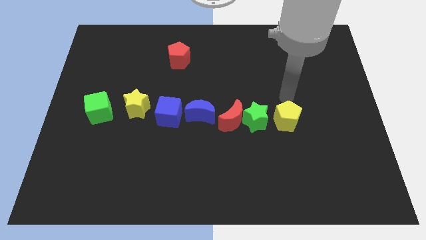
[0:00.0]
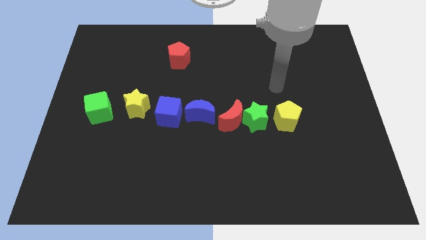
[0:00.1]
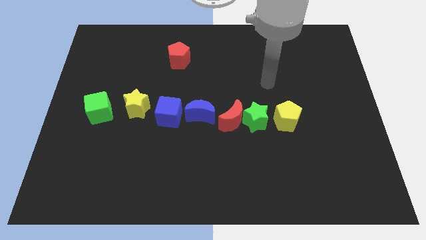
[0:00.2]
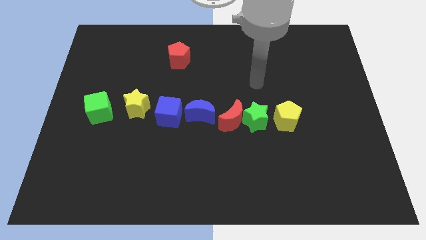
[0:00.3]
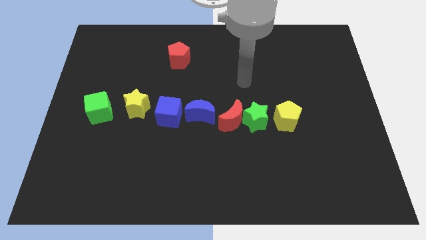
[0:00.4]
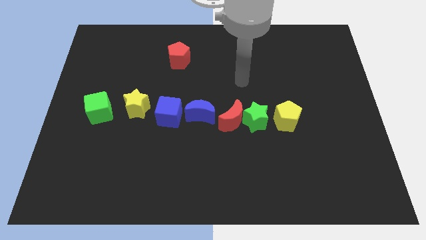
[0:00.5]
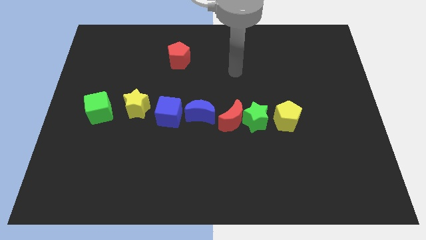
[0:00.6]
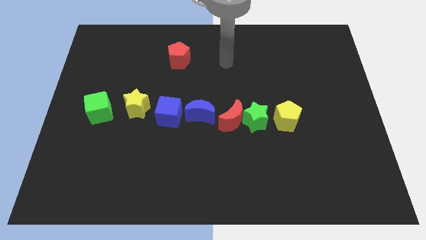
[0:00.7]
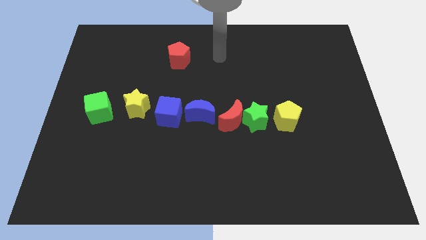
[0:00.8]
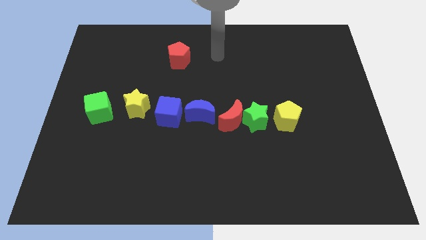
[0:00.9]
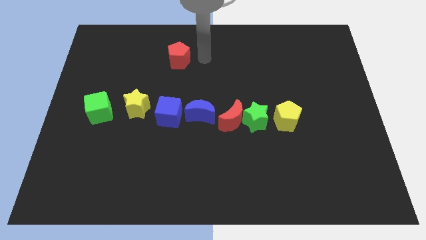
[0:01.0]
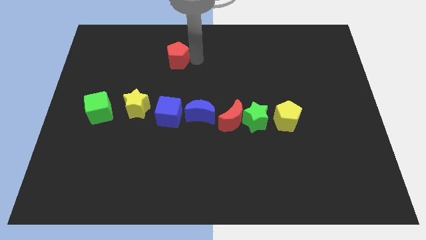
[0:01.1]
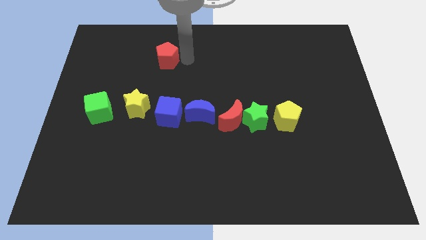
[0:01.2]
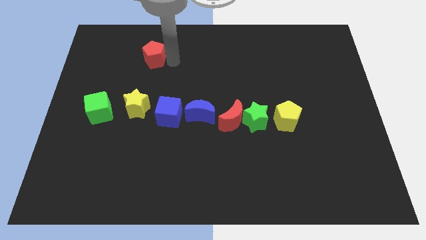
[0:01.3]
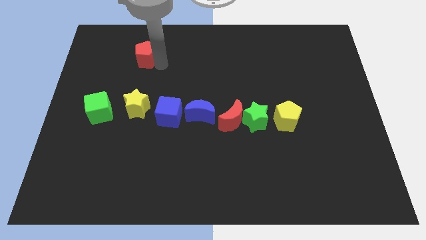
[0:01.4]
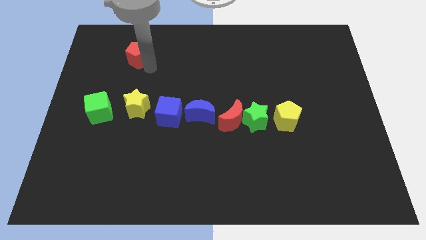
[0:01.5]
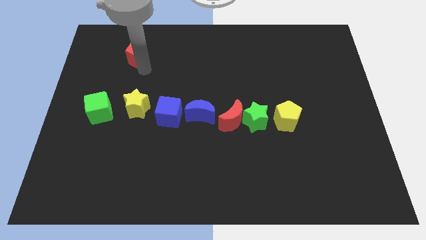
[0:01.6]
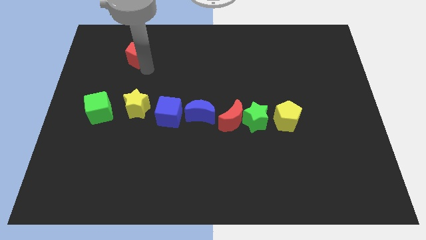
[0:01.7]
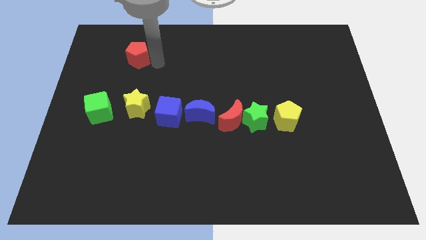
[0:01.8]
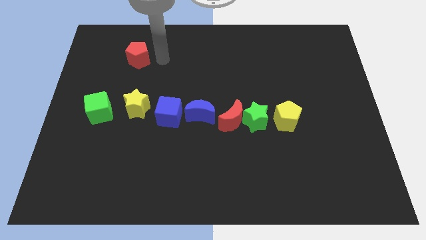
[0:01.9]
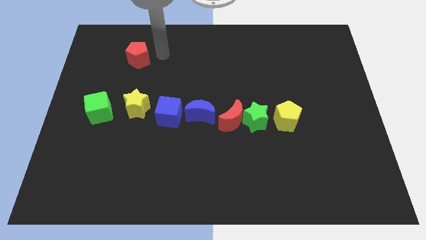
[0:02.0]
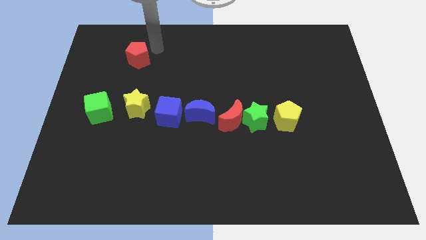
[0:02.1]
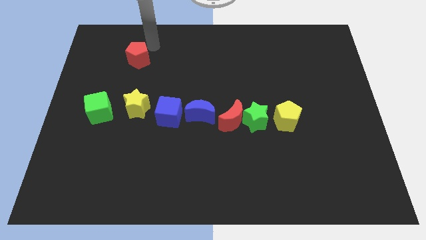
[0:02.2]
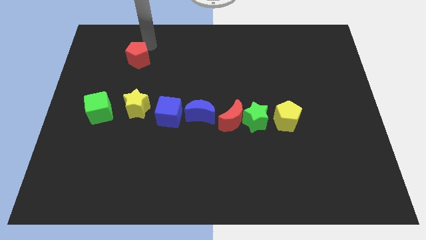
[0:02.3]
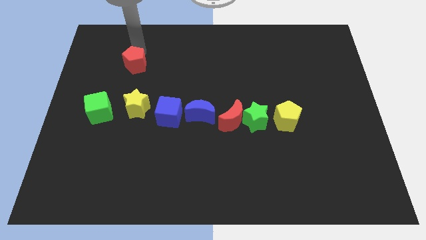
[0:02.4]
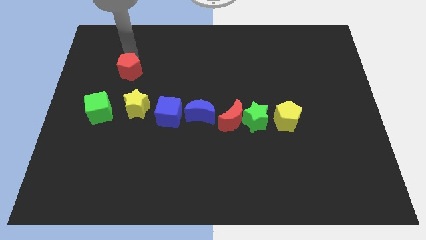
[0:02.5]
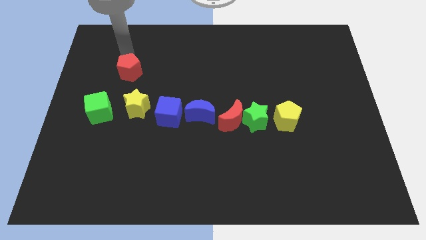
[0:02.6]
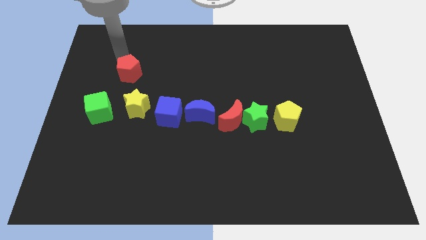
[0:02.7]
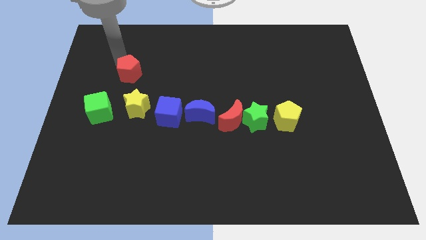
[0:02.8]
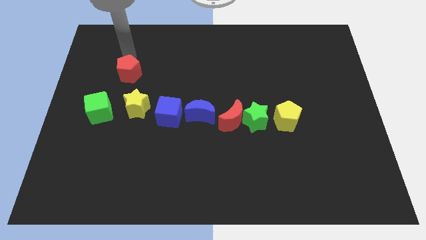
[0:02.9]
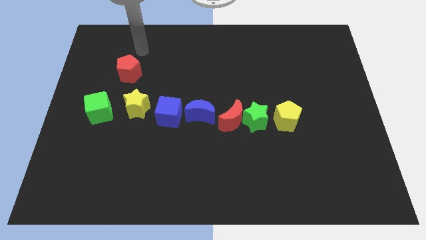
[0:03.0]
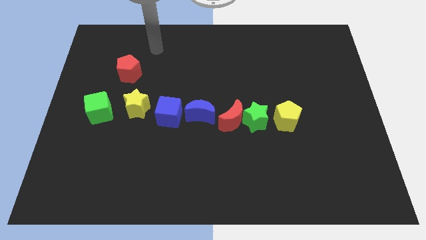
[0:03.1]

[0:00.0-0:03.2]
move your arm from the yellow pentagon to the red pentagon

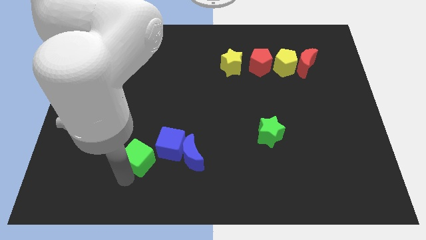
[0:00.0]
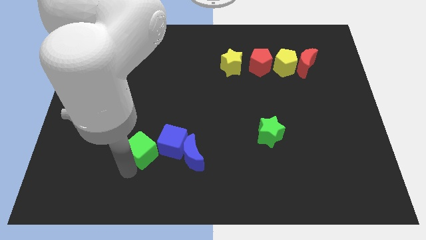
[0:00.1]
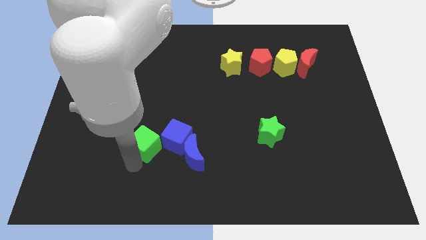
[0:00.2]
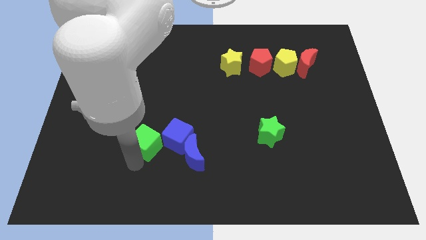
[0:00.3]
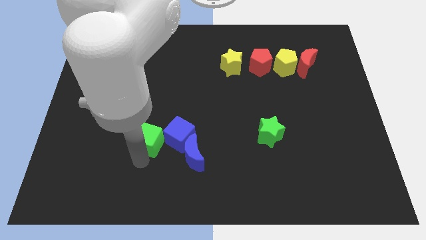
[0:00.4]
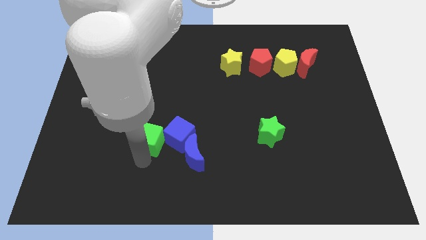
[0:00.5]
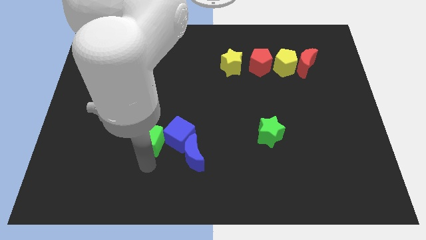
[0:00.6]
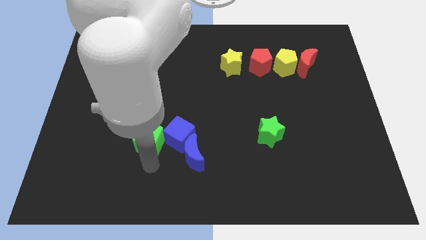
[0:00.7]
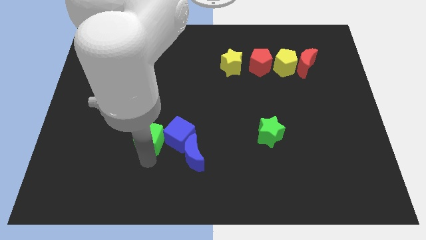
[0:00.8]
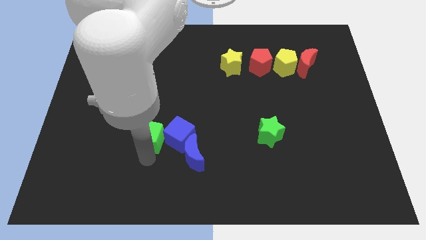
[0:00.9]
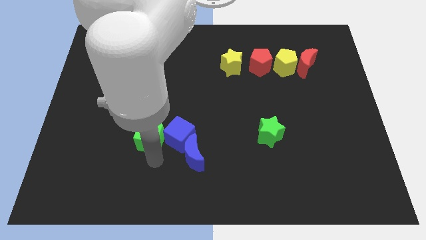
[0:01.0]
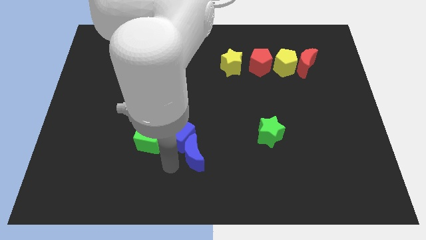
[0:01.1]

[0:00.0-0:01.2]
place the green cube beside the blue blue cube

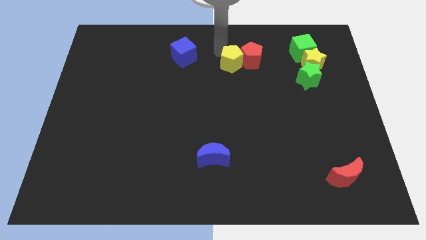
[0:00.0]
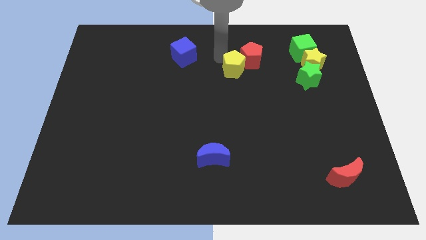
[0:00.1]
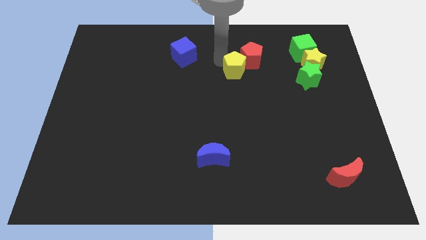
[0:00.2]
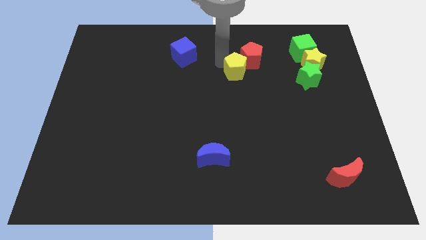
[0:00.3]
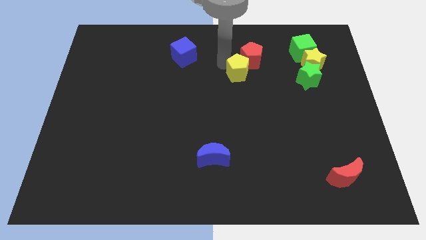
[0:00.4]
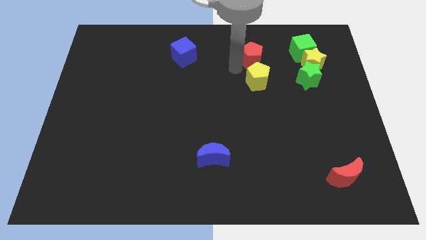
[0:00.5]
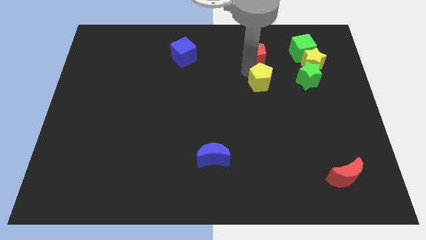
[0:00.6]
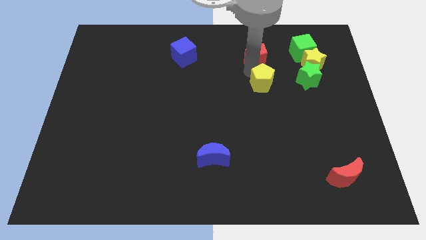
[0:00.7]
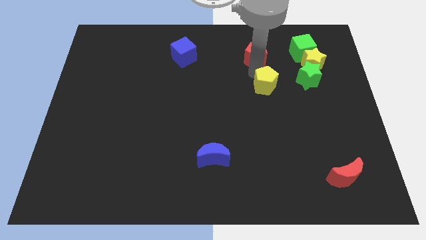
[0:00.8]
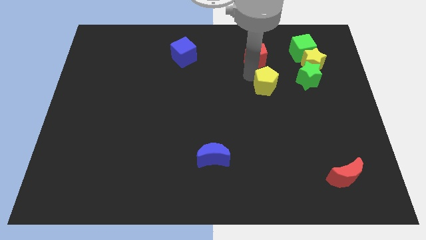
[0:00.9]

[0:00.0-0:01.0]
place the yellow pentagon below the red pentagon

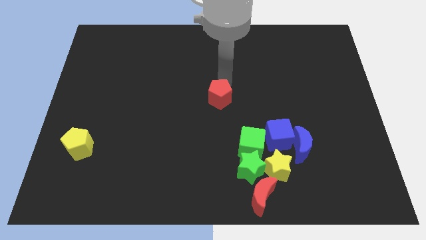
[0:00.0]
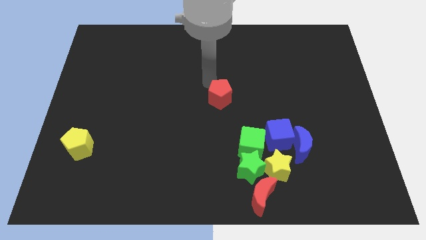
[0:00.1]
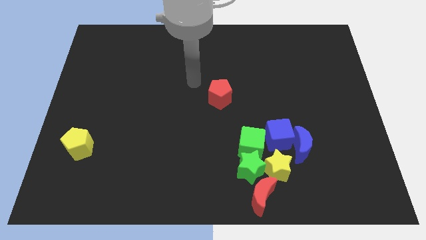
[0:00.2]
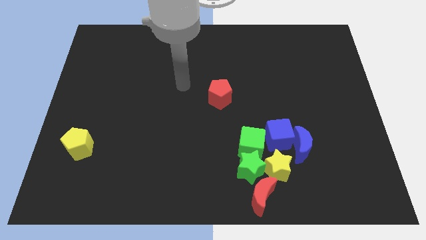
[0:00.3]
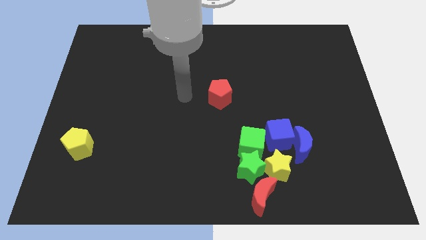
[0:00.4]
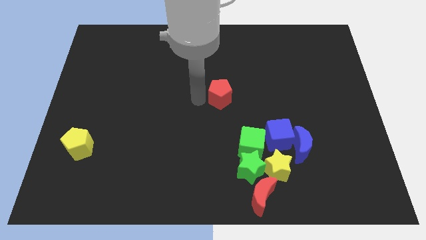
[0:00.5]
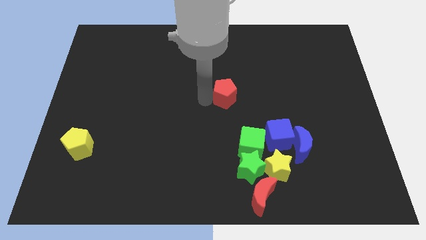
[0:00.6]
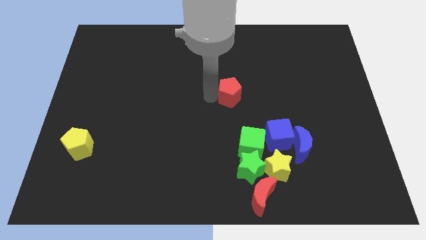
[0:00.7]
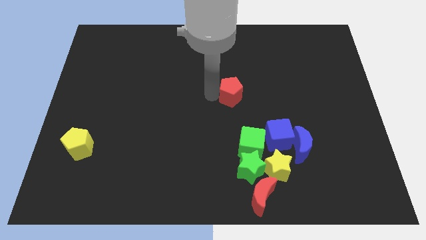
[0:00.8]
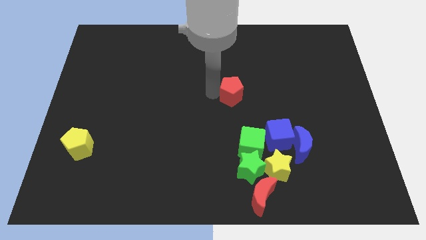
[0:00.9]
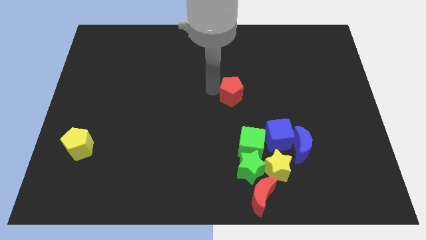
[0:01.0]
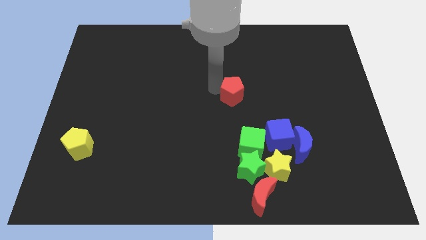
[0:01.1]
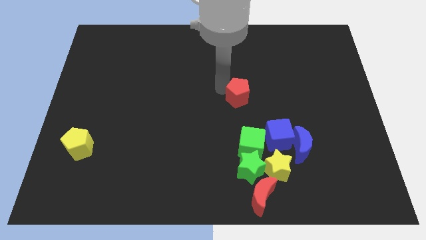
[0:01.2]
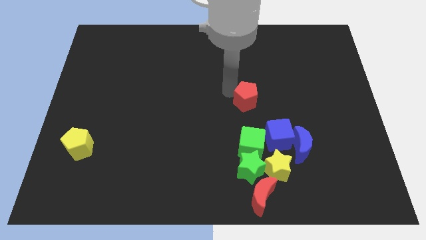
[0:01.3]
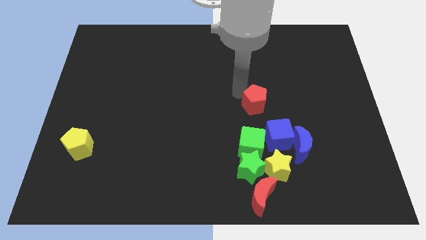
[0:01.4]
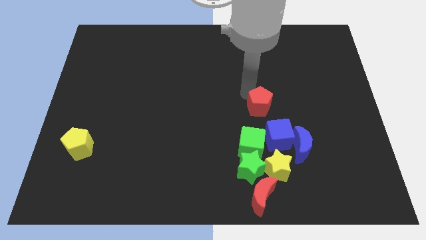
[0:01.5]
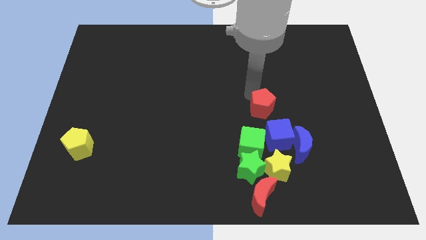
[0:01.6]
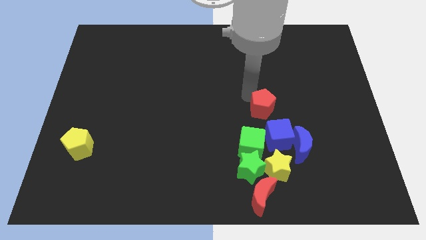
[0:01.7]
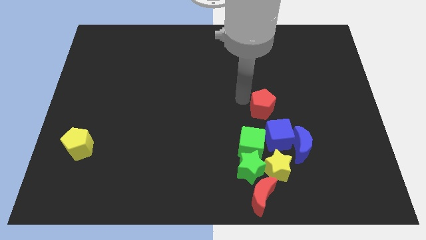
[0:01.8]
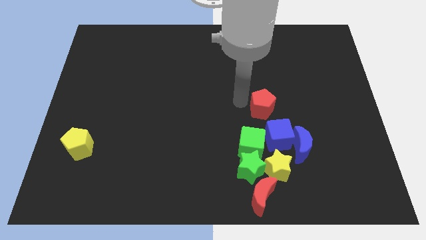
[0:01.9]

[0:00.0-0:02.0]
place the red pentagon above the blue cube

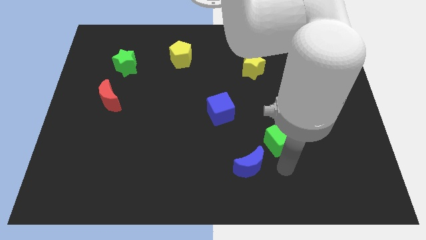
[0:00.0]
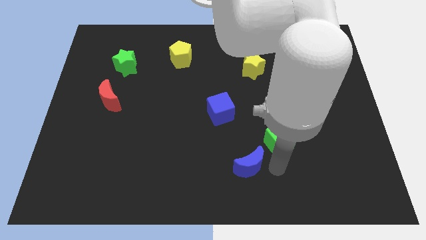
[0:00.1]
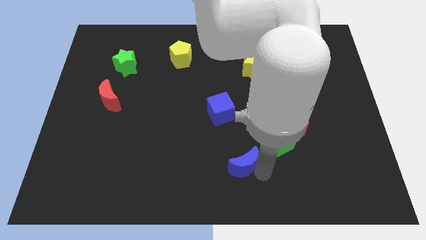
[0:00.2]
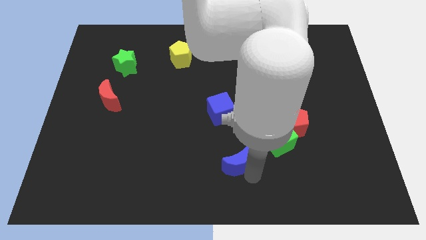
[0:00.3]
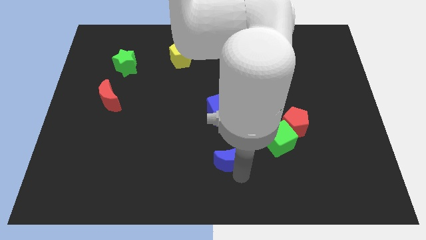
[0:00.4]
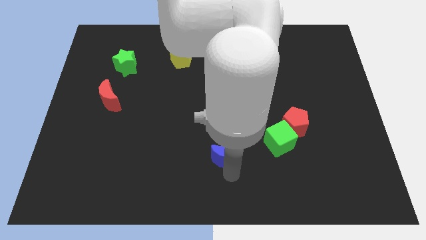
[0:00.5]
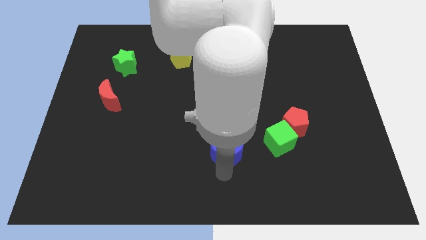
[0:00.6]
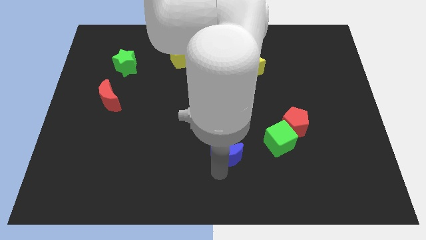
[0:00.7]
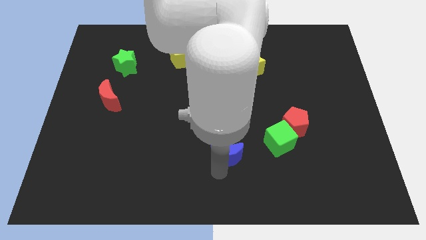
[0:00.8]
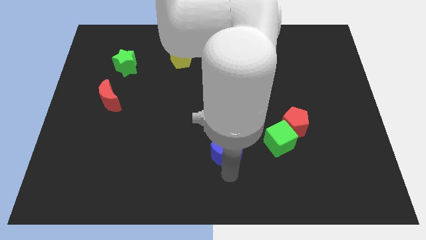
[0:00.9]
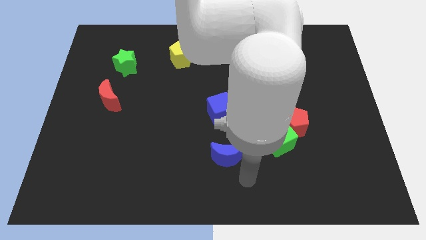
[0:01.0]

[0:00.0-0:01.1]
slightly push the blue moon upwards

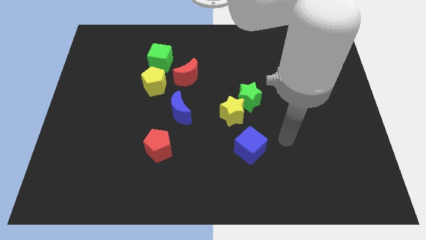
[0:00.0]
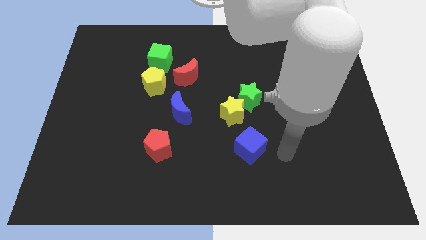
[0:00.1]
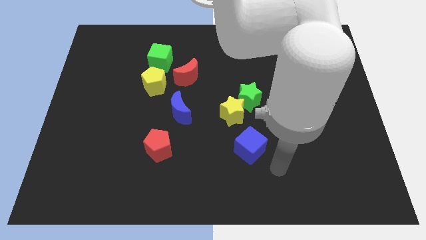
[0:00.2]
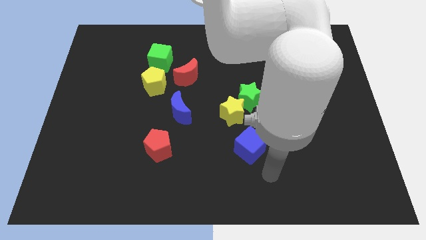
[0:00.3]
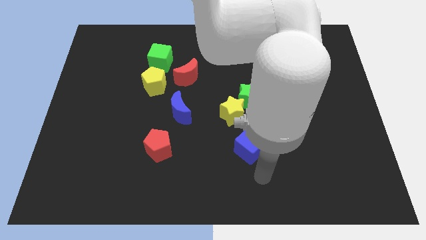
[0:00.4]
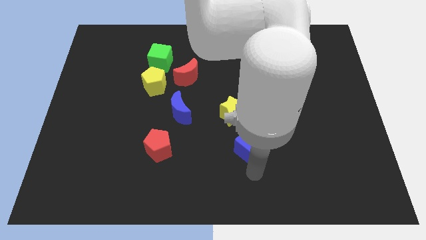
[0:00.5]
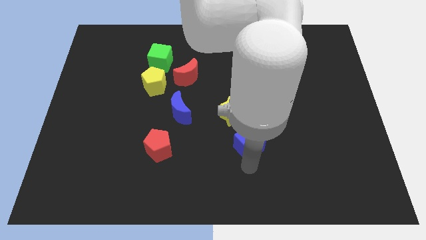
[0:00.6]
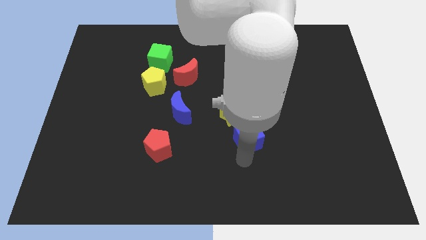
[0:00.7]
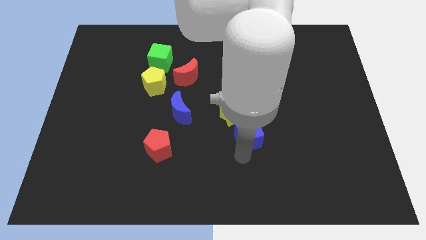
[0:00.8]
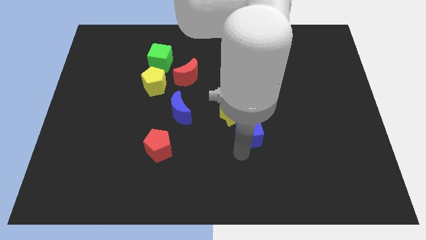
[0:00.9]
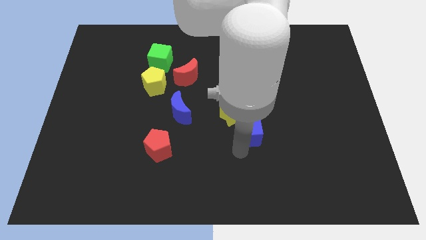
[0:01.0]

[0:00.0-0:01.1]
move the blue cube into the yellow star from the bottom
